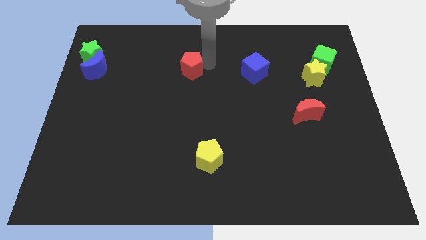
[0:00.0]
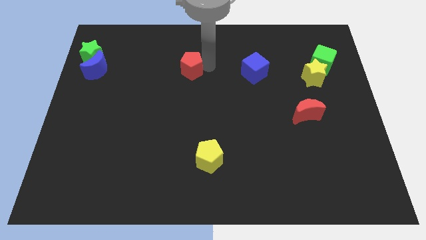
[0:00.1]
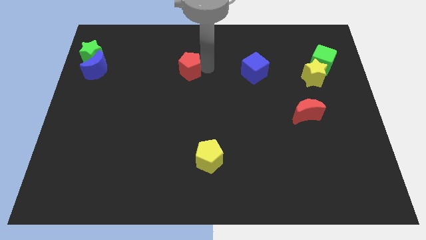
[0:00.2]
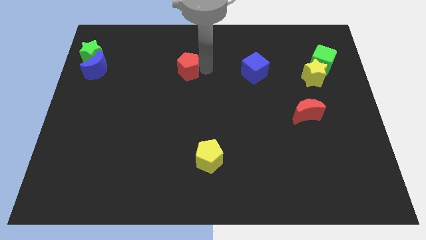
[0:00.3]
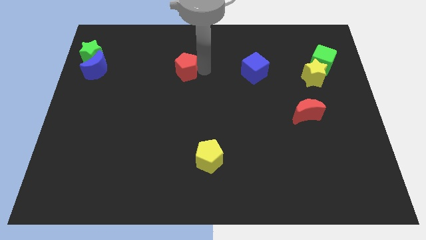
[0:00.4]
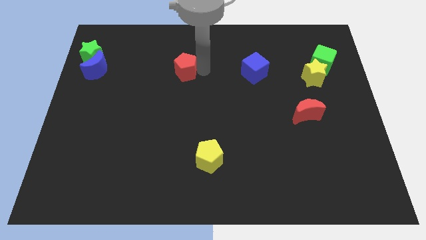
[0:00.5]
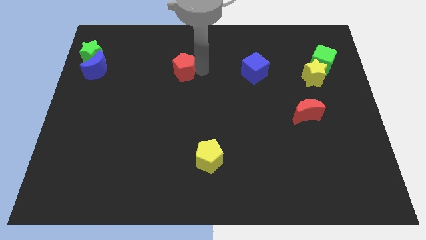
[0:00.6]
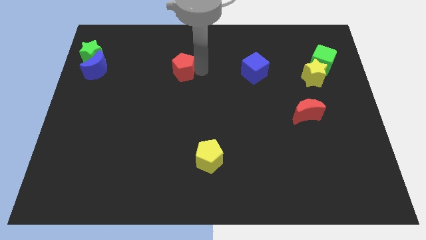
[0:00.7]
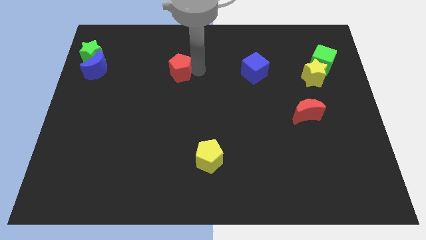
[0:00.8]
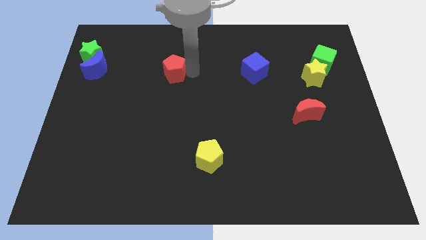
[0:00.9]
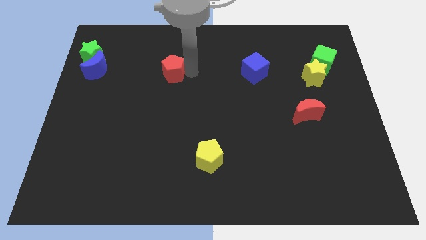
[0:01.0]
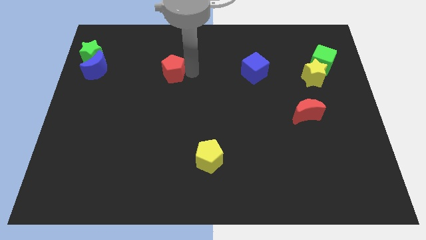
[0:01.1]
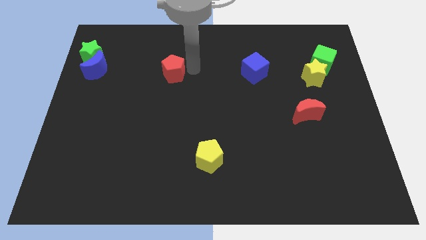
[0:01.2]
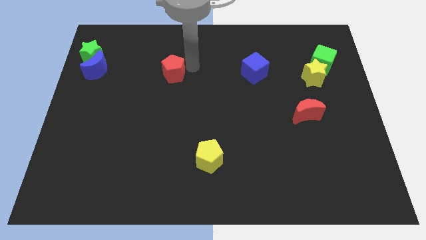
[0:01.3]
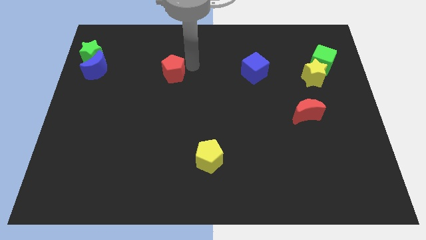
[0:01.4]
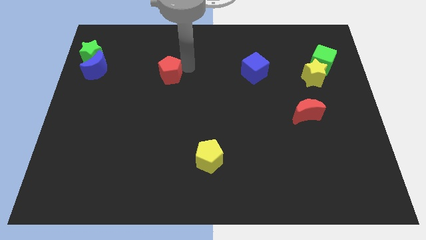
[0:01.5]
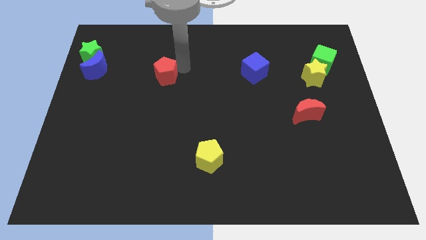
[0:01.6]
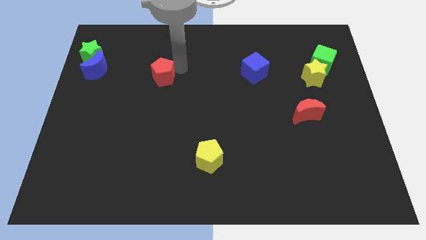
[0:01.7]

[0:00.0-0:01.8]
push the red pentagon slightly to the left

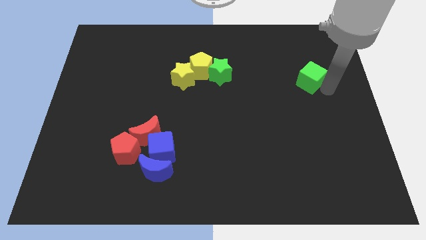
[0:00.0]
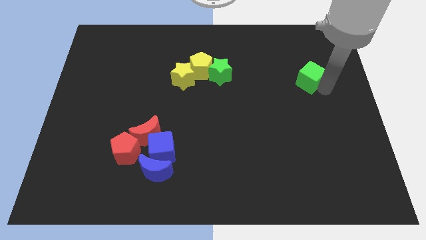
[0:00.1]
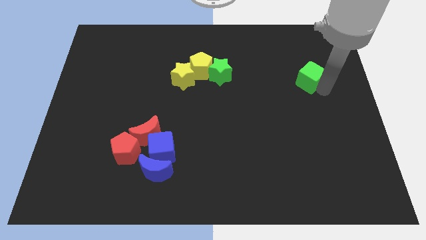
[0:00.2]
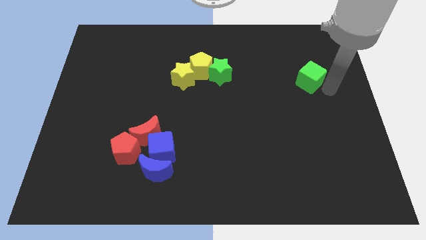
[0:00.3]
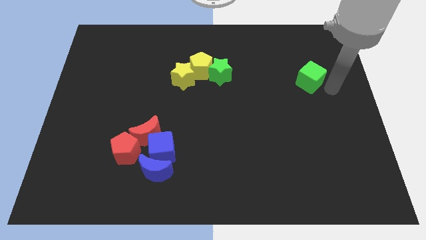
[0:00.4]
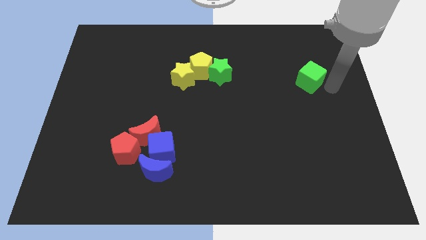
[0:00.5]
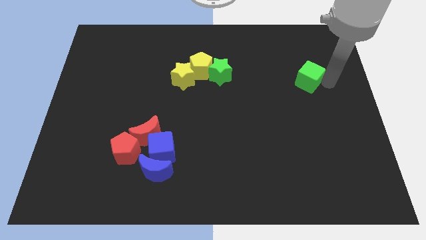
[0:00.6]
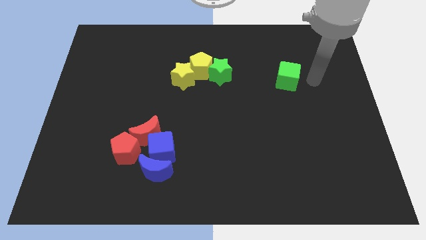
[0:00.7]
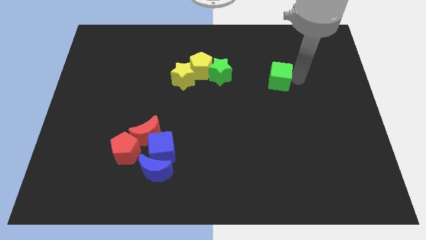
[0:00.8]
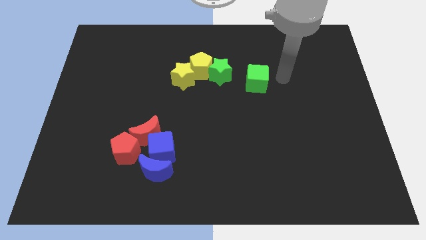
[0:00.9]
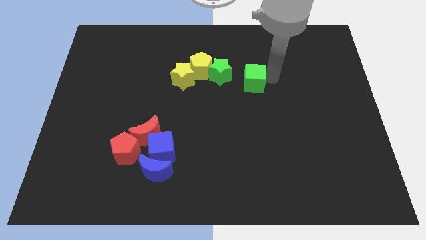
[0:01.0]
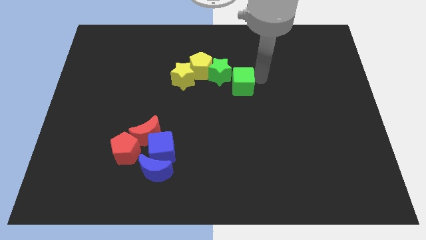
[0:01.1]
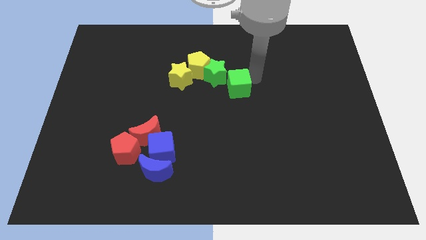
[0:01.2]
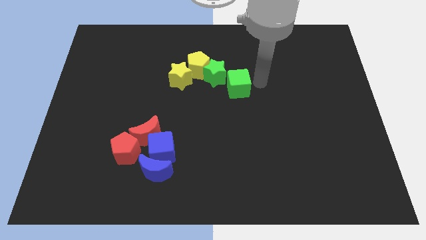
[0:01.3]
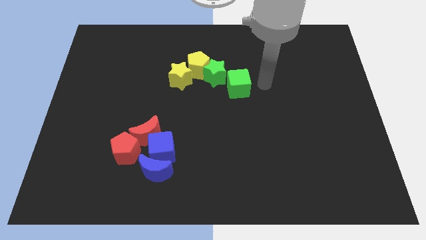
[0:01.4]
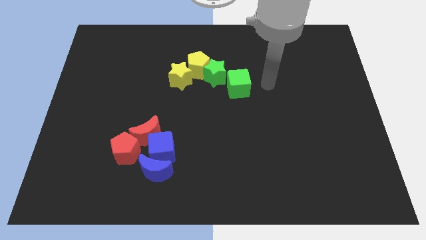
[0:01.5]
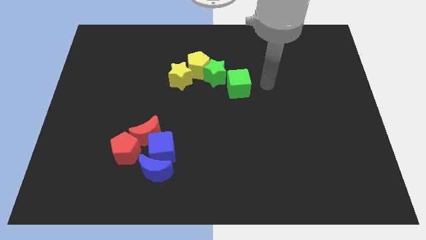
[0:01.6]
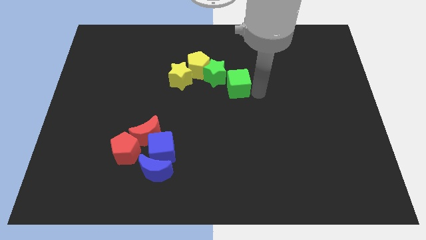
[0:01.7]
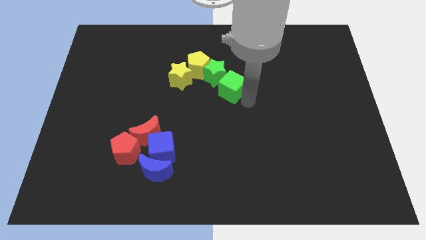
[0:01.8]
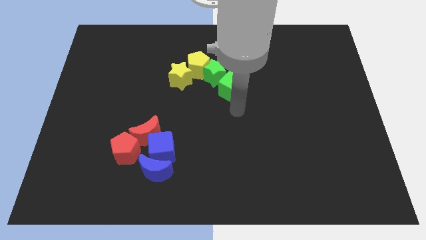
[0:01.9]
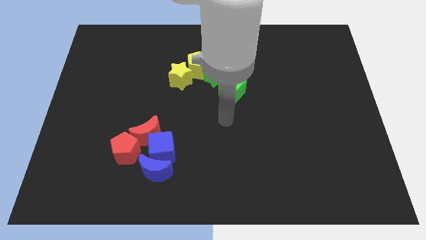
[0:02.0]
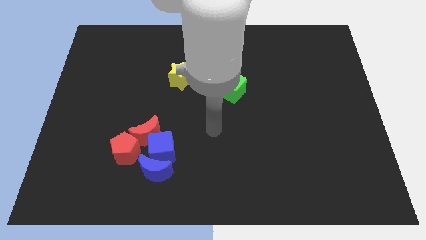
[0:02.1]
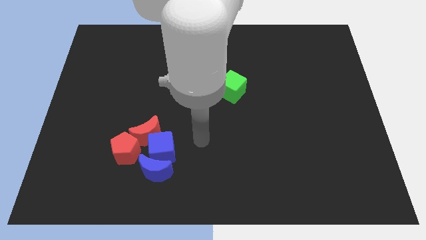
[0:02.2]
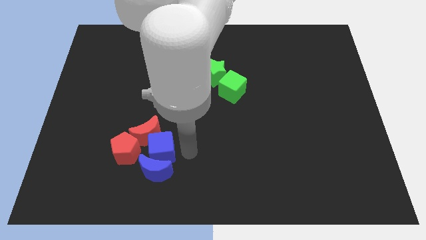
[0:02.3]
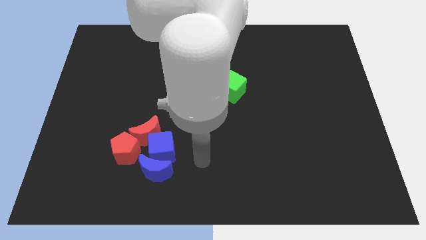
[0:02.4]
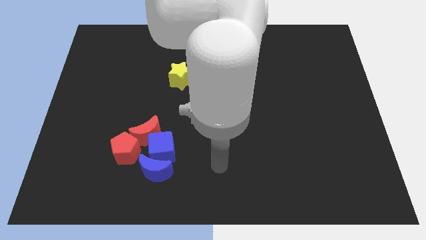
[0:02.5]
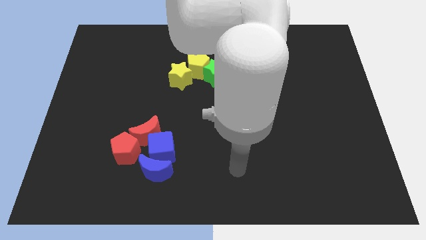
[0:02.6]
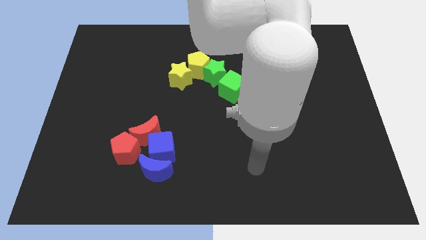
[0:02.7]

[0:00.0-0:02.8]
move your arm away from the green cube

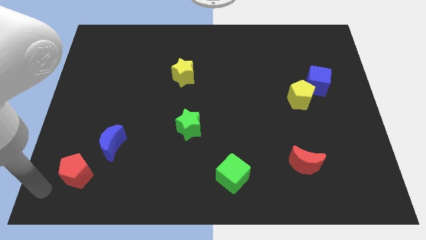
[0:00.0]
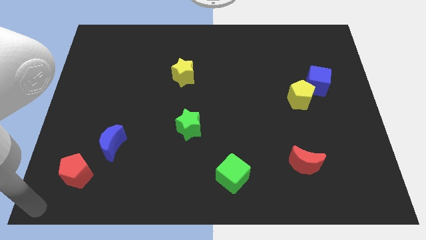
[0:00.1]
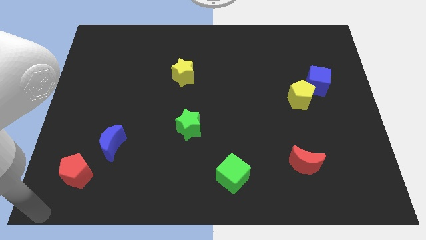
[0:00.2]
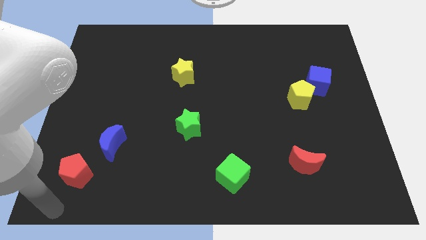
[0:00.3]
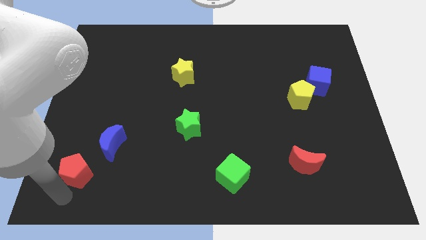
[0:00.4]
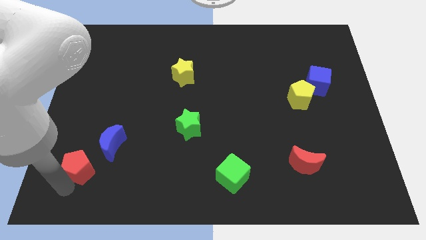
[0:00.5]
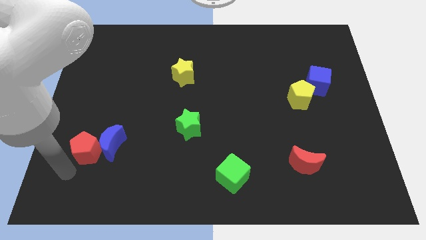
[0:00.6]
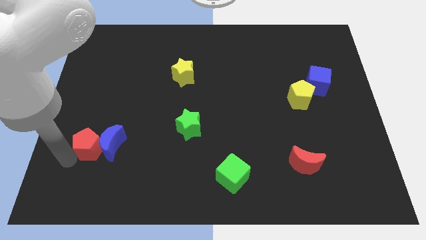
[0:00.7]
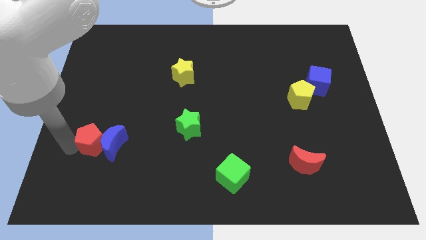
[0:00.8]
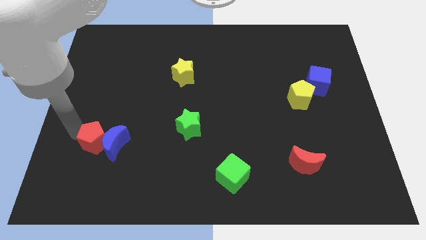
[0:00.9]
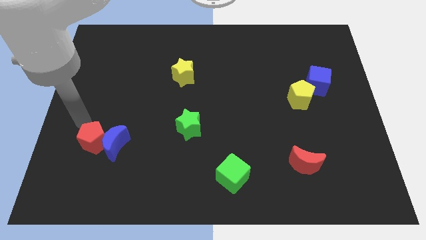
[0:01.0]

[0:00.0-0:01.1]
push red pentagon into blue moon

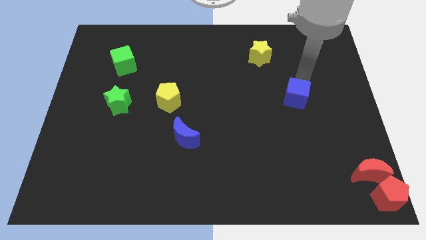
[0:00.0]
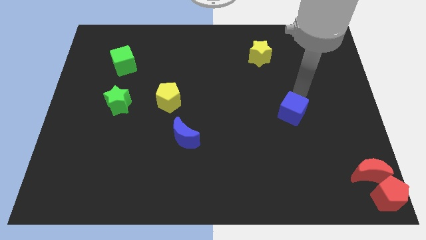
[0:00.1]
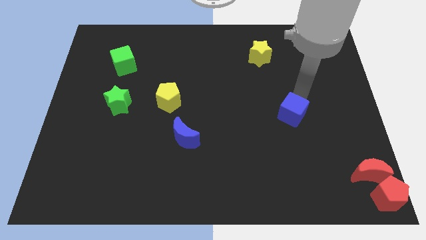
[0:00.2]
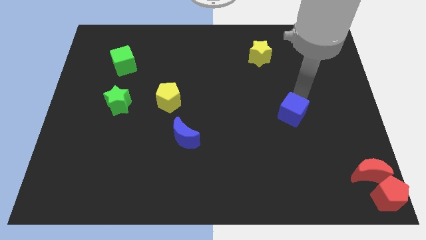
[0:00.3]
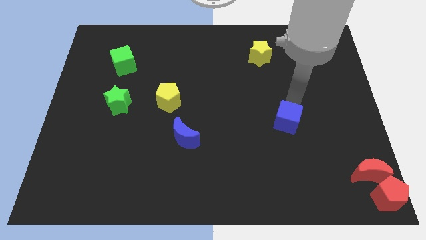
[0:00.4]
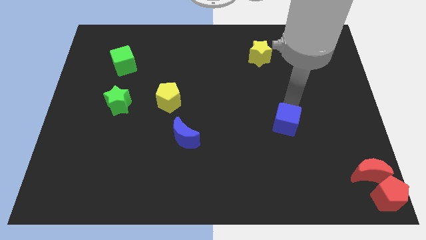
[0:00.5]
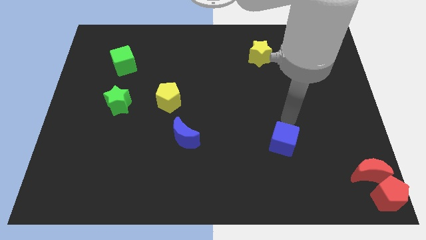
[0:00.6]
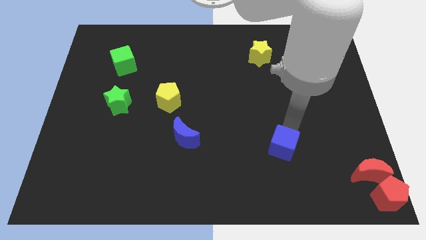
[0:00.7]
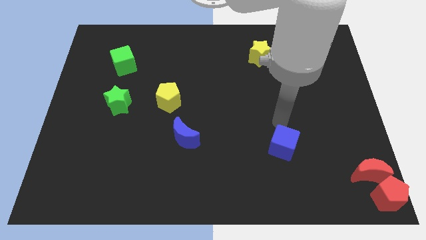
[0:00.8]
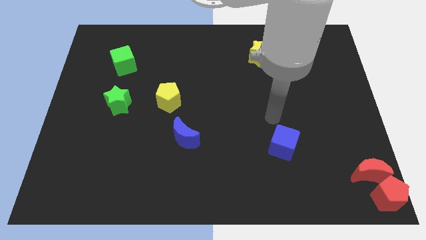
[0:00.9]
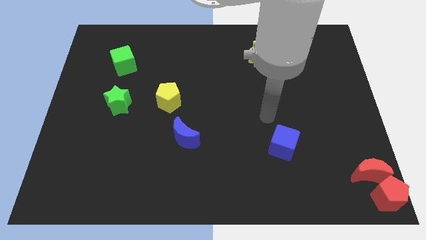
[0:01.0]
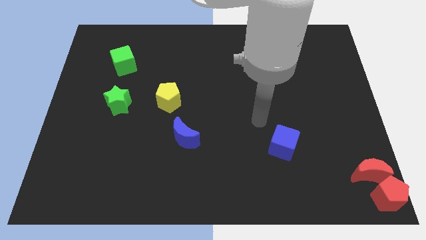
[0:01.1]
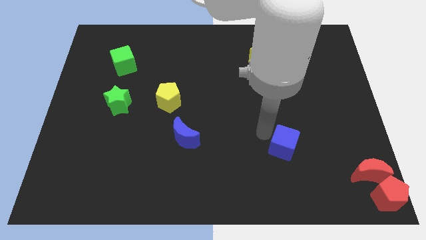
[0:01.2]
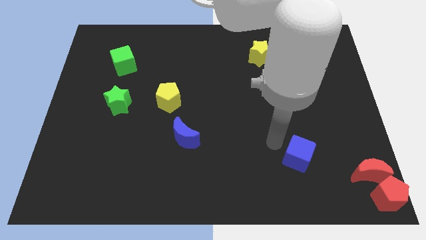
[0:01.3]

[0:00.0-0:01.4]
push the blue cube to the bottom of the board

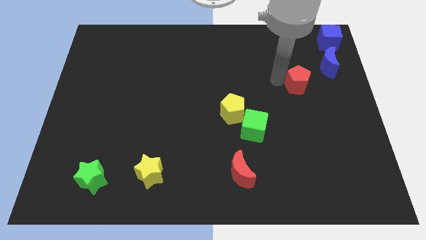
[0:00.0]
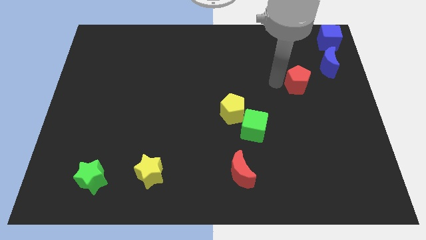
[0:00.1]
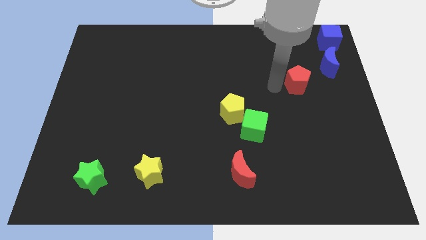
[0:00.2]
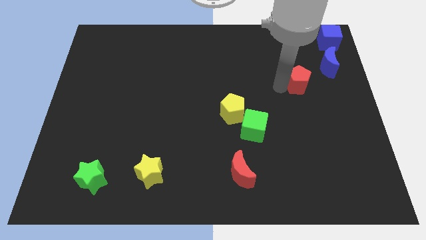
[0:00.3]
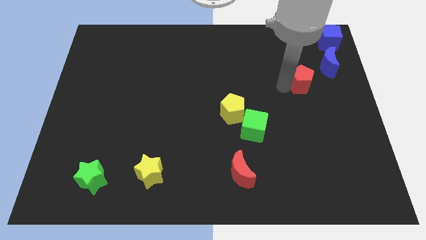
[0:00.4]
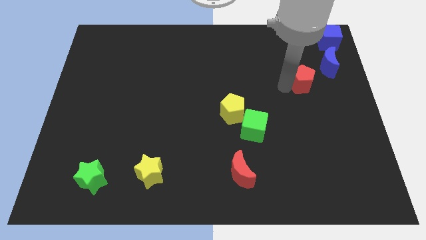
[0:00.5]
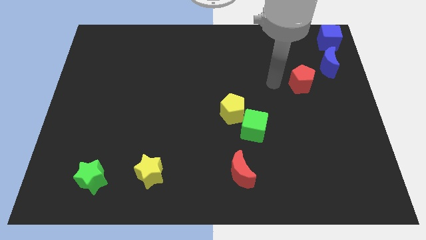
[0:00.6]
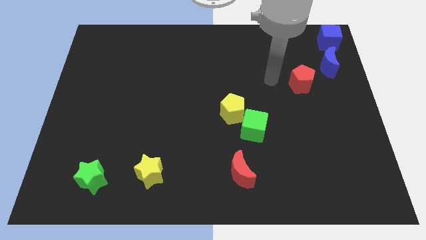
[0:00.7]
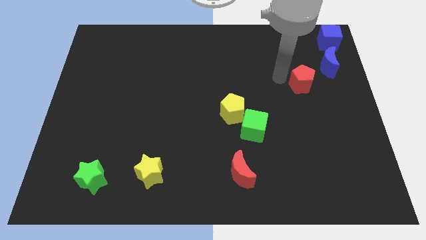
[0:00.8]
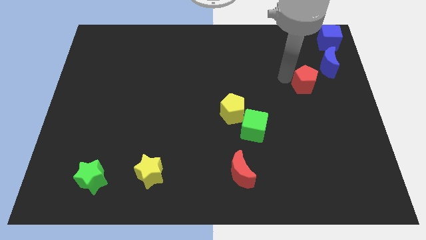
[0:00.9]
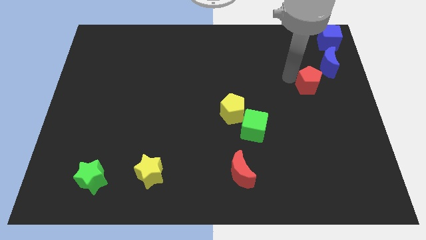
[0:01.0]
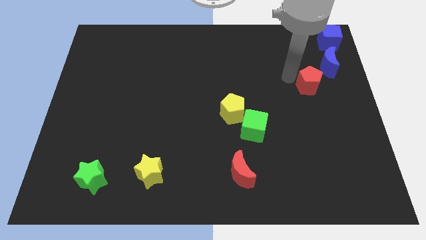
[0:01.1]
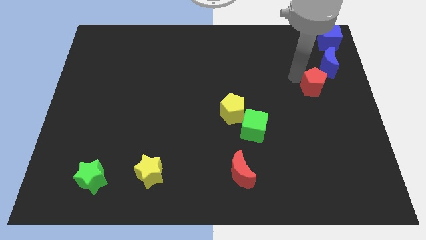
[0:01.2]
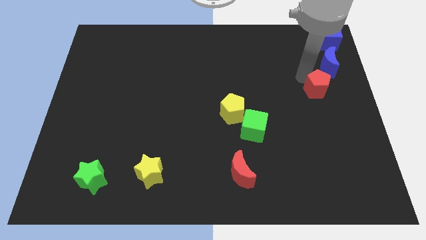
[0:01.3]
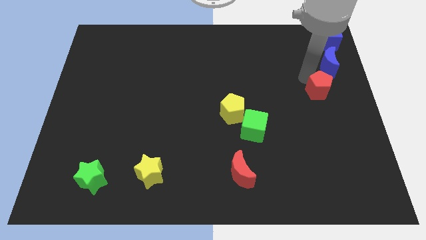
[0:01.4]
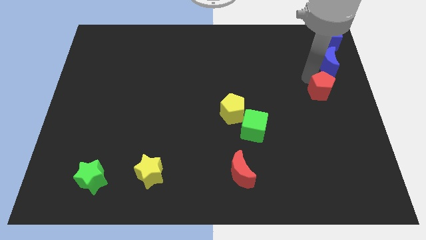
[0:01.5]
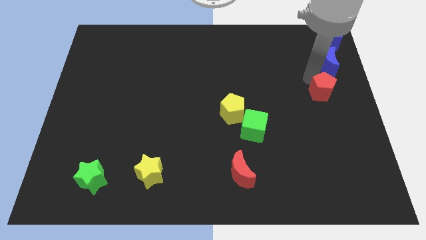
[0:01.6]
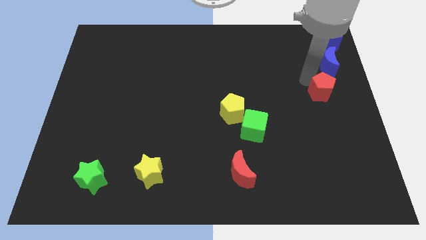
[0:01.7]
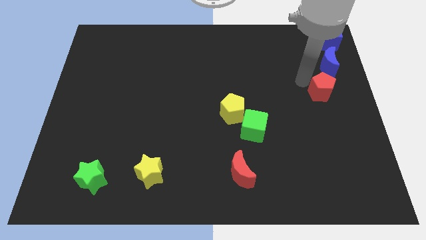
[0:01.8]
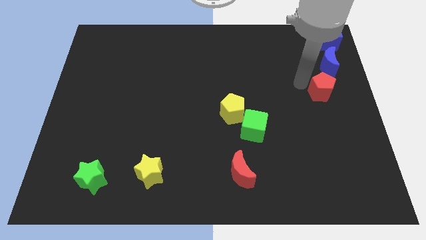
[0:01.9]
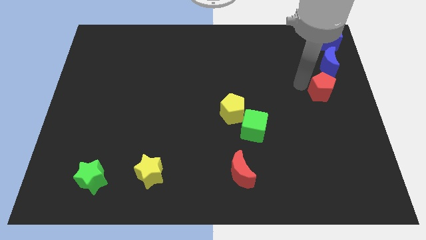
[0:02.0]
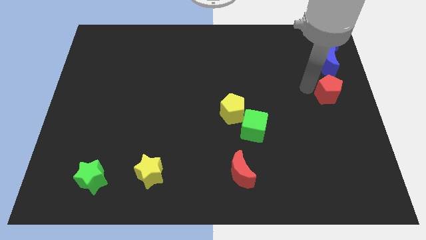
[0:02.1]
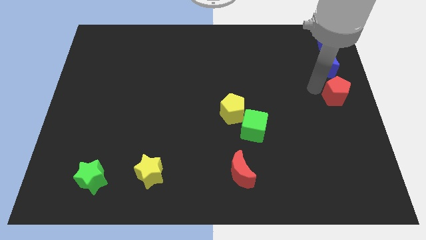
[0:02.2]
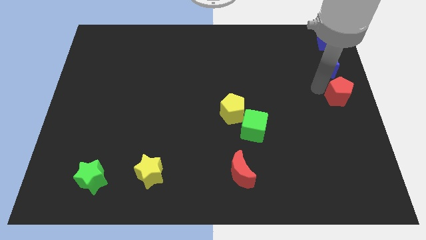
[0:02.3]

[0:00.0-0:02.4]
place the red pentagon below the blue moon
